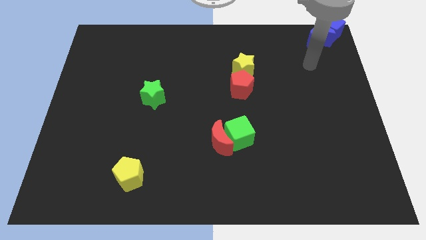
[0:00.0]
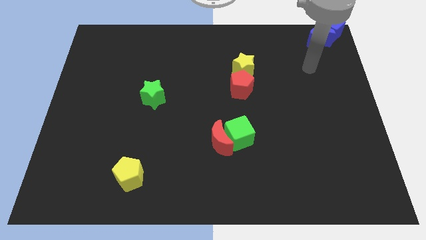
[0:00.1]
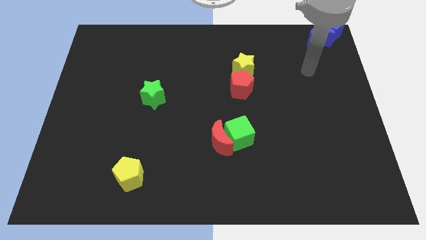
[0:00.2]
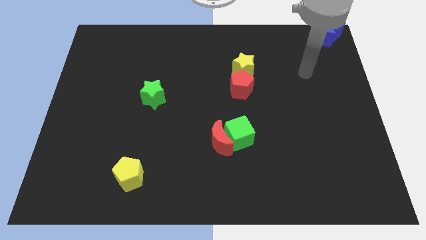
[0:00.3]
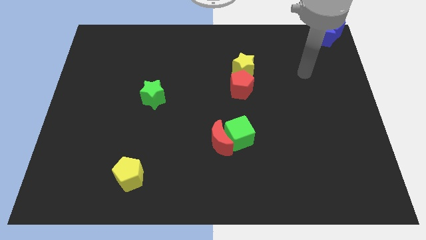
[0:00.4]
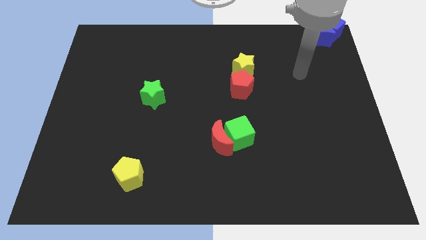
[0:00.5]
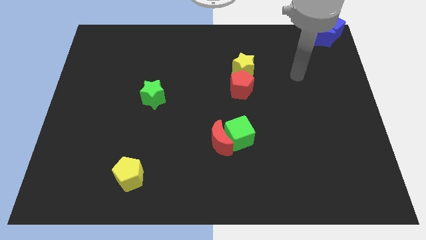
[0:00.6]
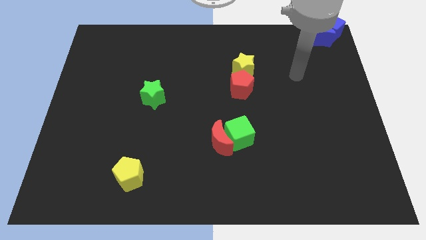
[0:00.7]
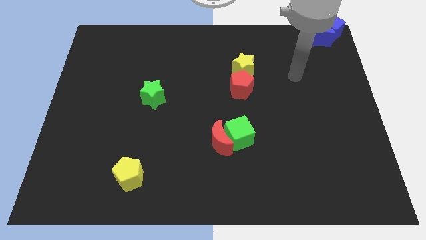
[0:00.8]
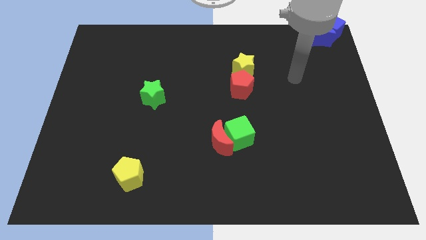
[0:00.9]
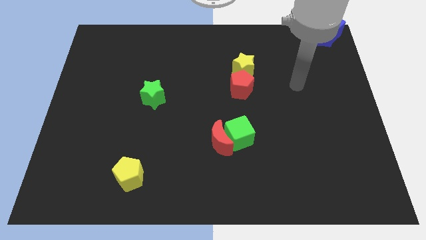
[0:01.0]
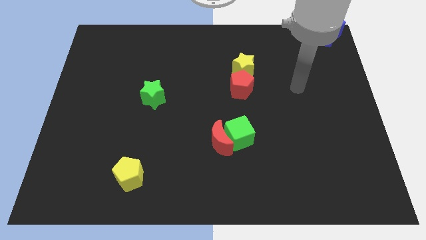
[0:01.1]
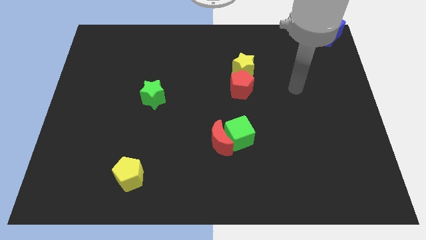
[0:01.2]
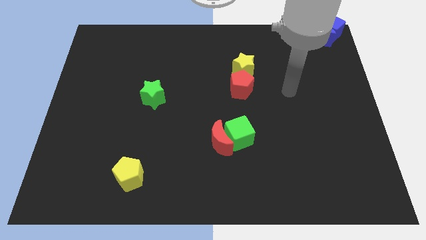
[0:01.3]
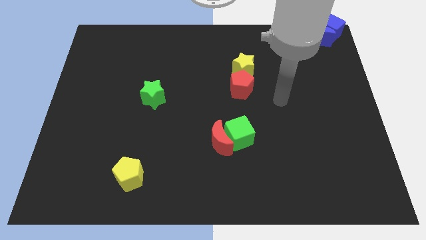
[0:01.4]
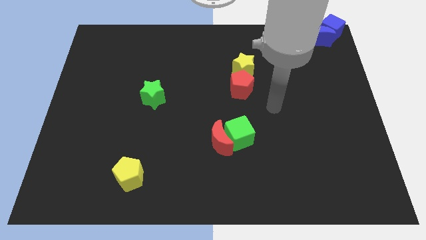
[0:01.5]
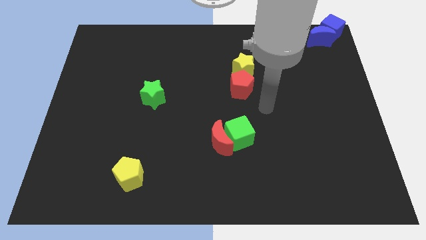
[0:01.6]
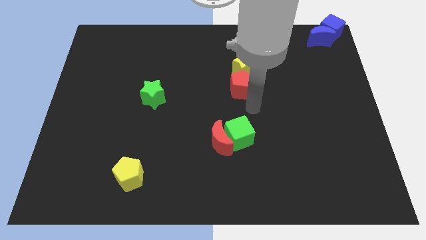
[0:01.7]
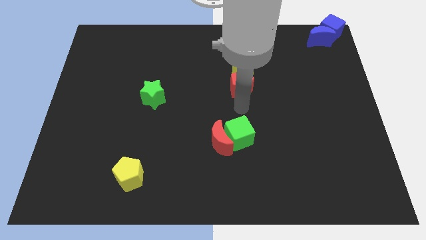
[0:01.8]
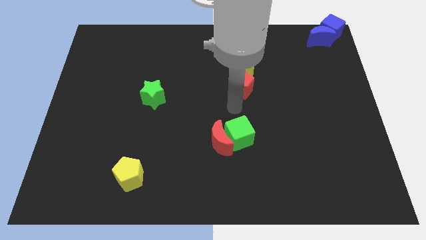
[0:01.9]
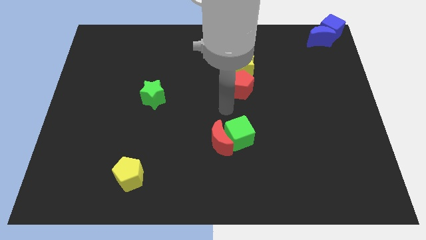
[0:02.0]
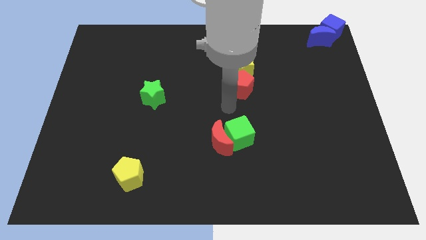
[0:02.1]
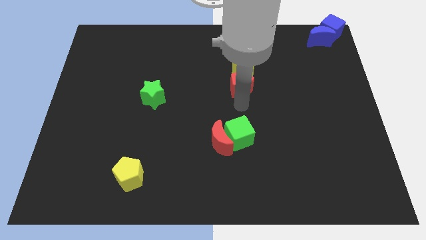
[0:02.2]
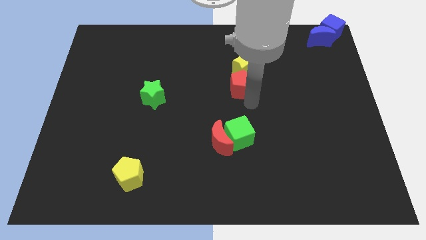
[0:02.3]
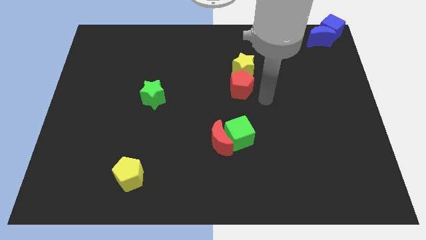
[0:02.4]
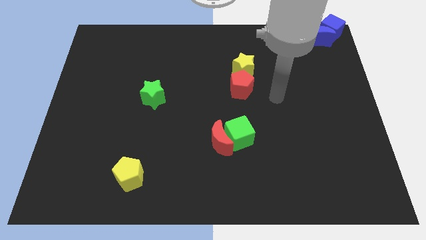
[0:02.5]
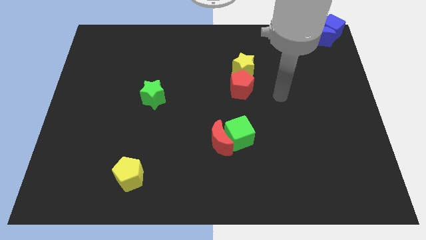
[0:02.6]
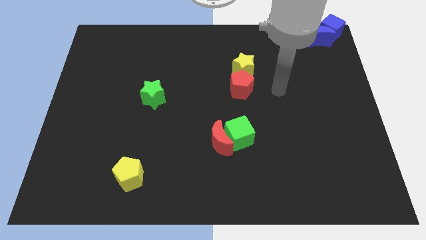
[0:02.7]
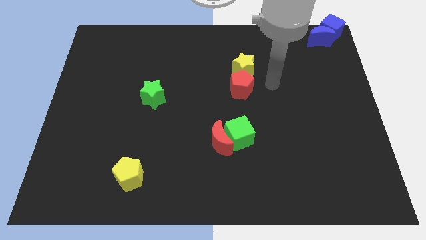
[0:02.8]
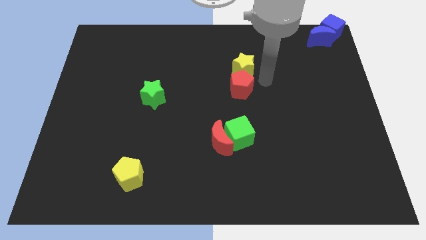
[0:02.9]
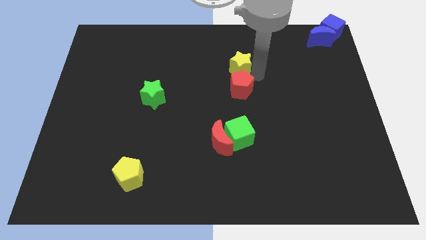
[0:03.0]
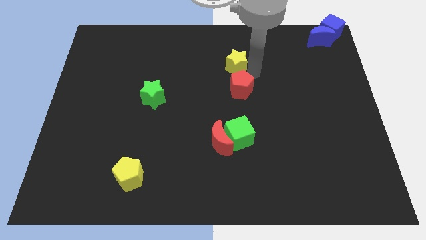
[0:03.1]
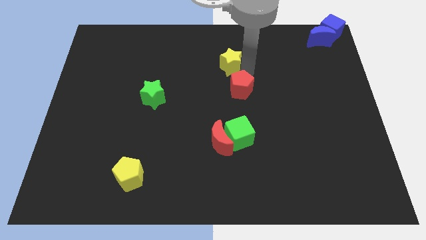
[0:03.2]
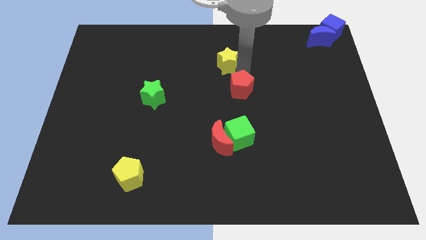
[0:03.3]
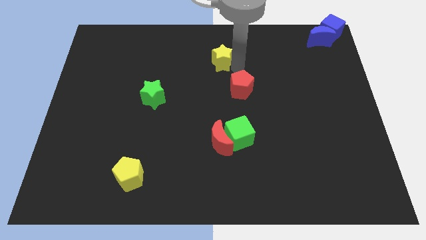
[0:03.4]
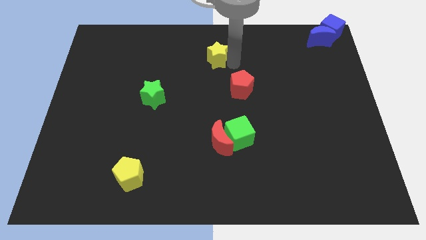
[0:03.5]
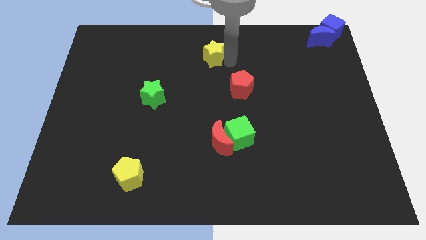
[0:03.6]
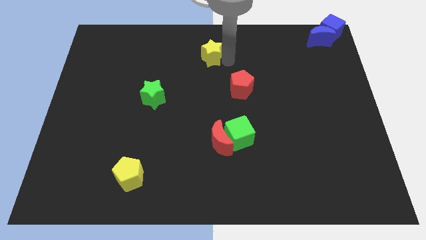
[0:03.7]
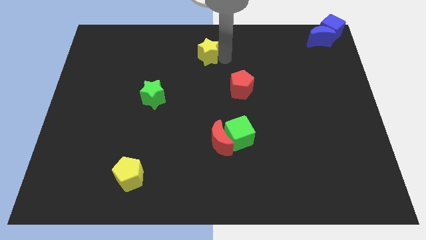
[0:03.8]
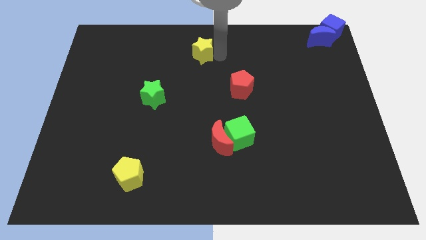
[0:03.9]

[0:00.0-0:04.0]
move the yellow star away from red pentagon

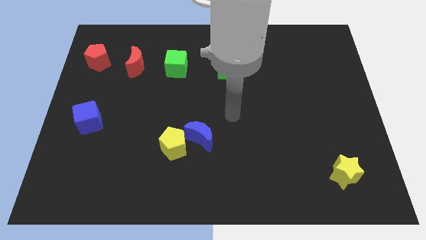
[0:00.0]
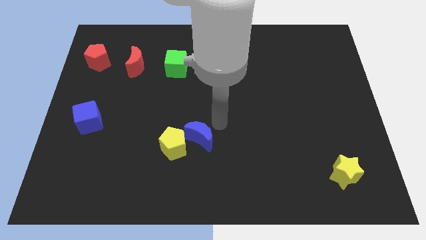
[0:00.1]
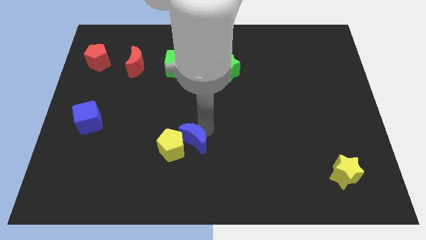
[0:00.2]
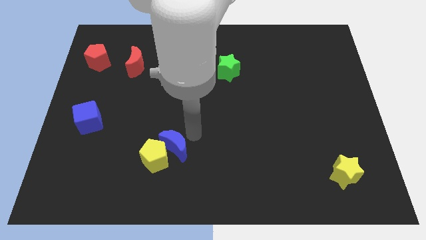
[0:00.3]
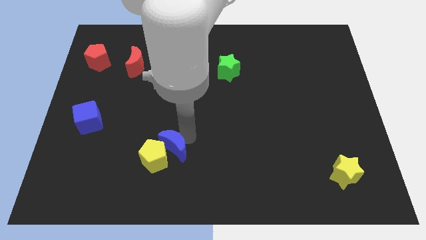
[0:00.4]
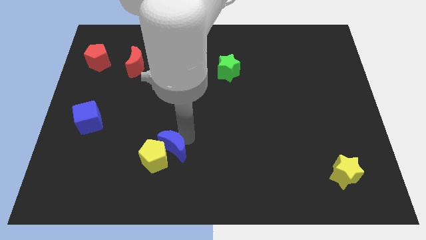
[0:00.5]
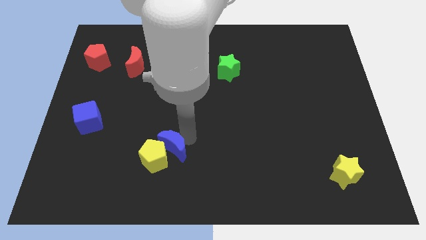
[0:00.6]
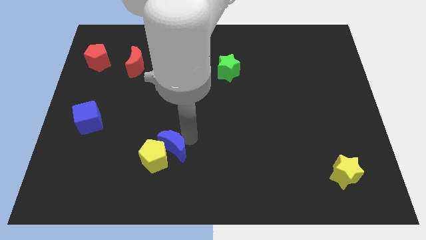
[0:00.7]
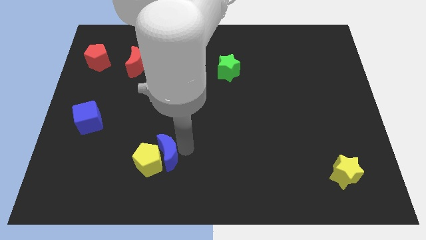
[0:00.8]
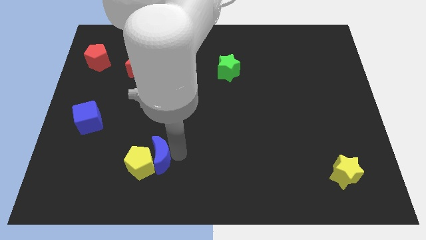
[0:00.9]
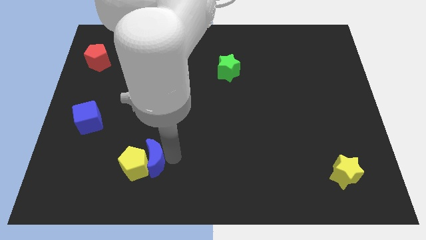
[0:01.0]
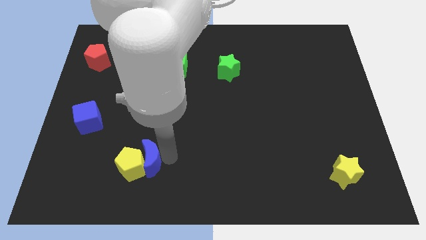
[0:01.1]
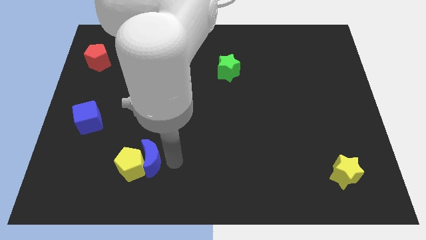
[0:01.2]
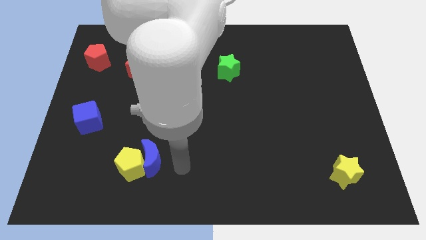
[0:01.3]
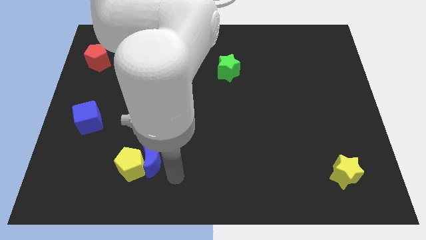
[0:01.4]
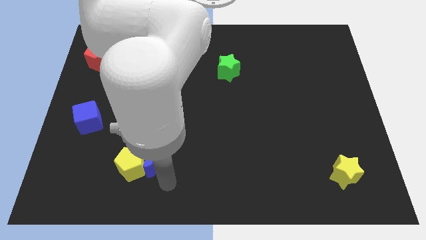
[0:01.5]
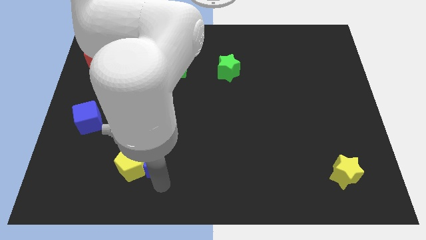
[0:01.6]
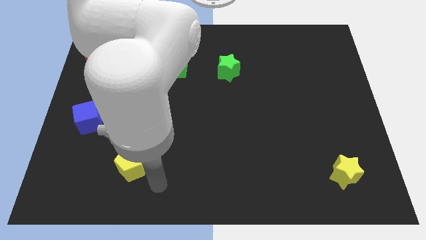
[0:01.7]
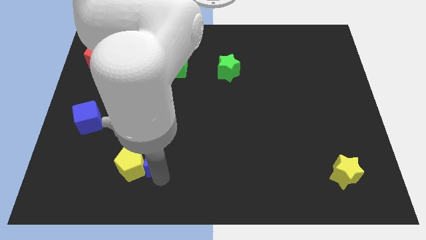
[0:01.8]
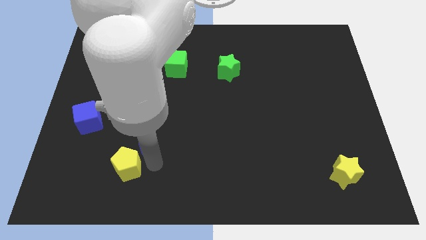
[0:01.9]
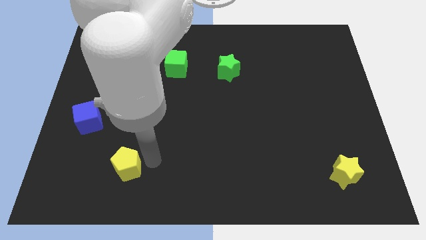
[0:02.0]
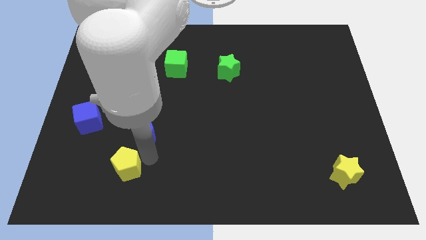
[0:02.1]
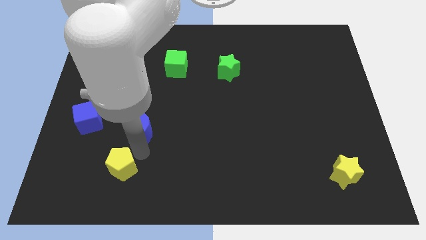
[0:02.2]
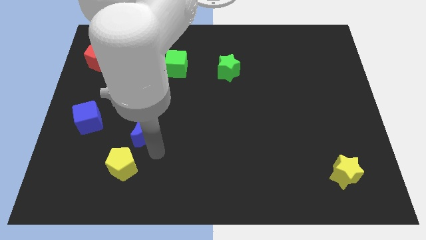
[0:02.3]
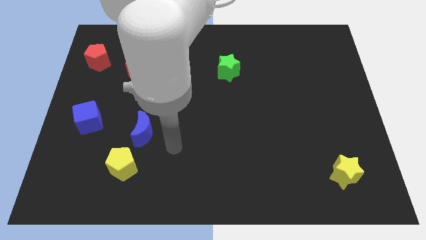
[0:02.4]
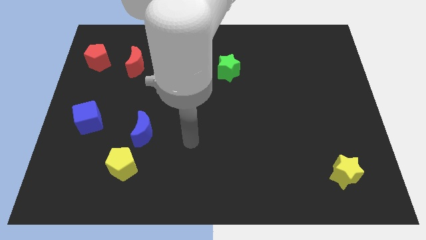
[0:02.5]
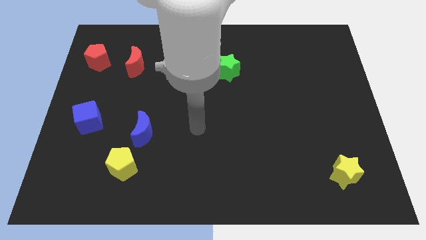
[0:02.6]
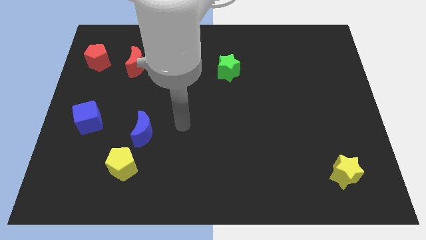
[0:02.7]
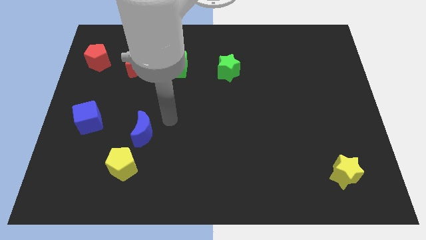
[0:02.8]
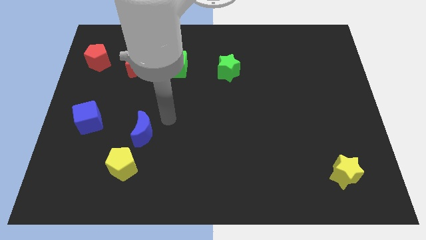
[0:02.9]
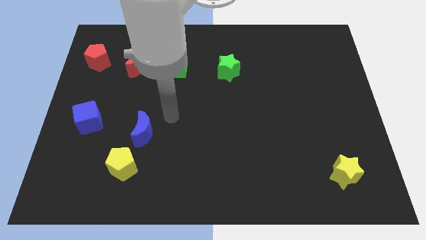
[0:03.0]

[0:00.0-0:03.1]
drag blue moon towards left side of the board

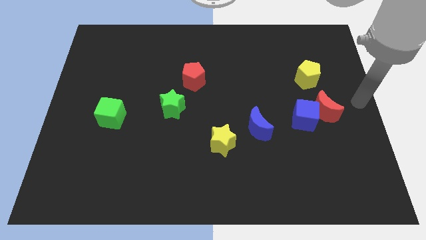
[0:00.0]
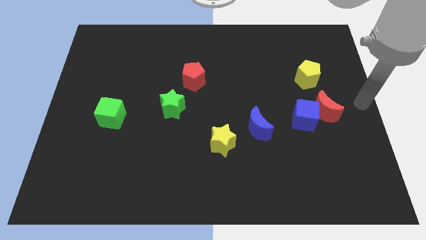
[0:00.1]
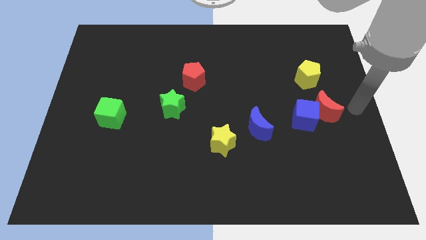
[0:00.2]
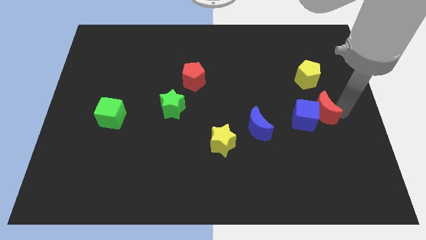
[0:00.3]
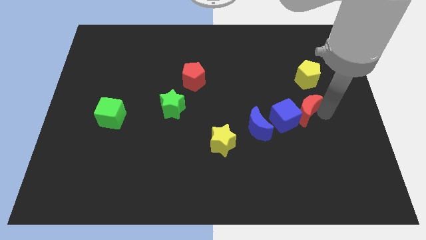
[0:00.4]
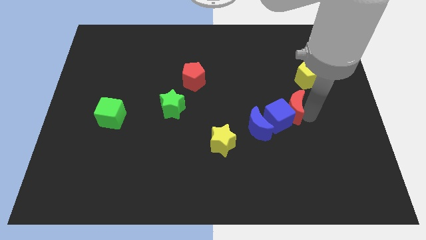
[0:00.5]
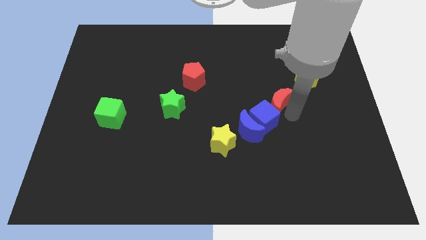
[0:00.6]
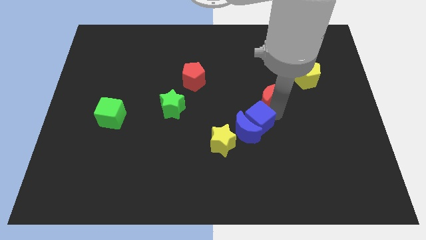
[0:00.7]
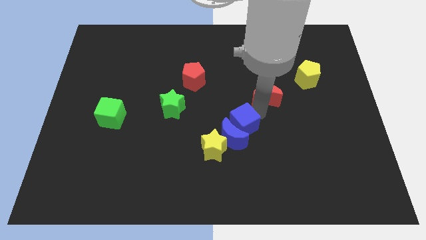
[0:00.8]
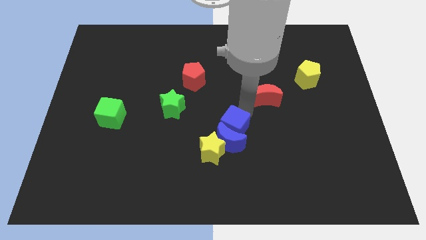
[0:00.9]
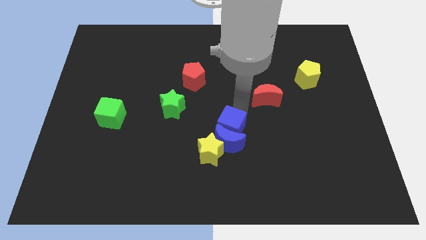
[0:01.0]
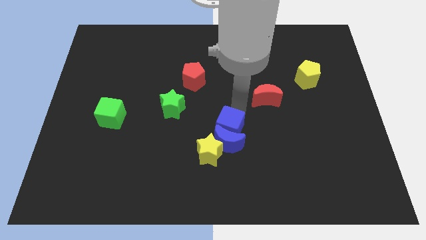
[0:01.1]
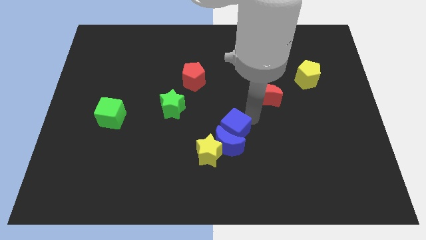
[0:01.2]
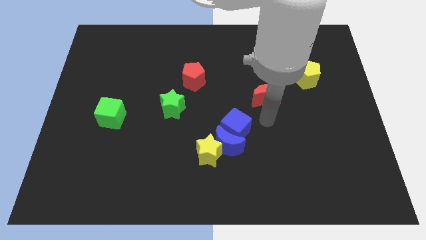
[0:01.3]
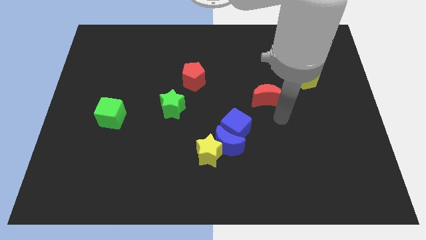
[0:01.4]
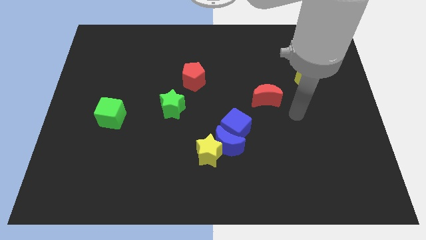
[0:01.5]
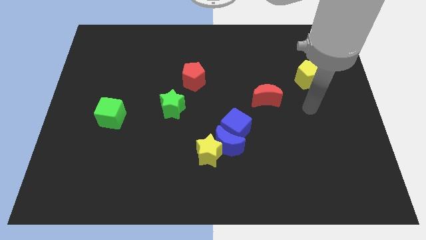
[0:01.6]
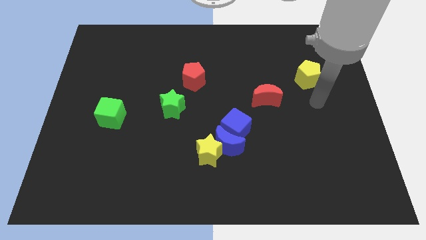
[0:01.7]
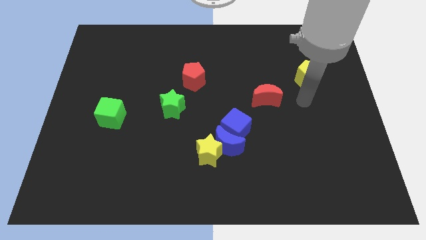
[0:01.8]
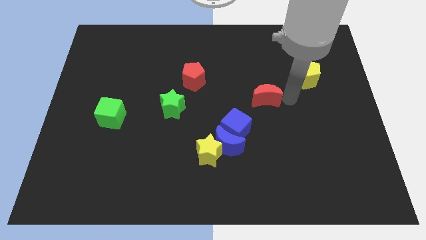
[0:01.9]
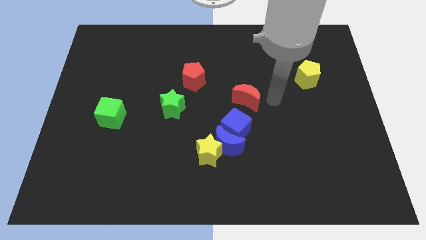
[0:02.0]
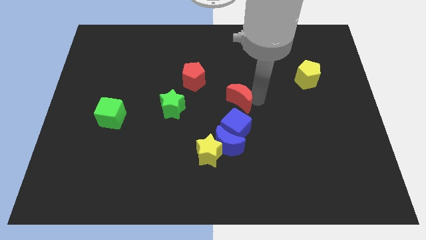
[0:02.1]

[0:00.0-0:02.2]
place blue blocks to the top right of yellow star
